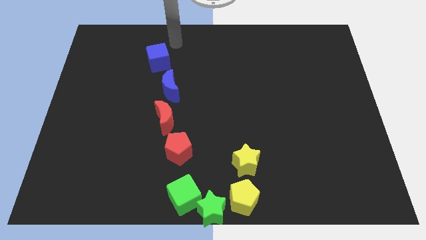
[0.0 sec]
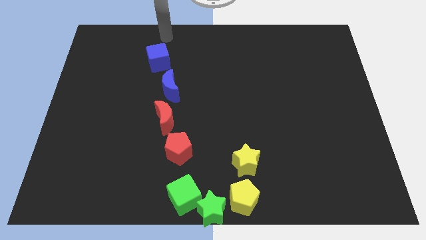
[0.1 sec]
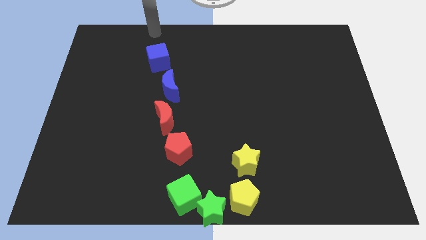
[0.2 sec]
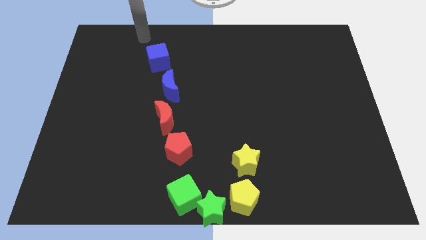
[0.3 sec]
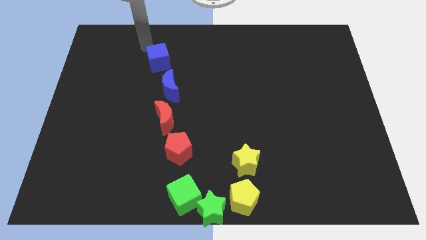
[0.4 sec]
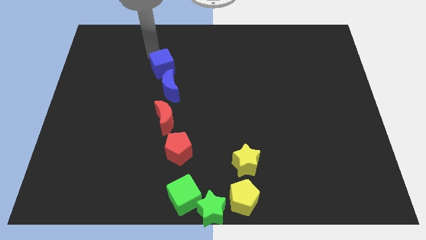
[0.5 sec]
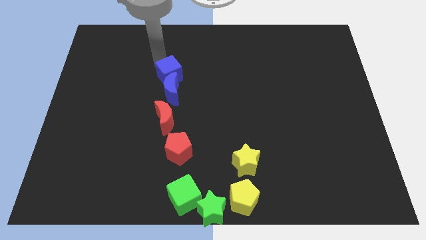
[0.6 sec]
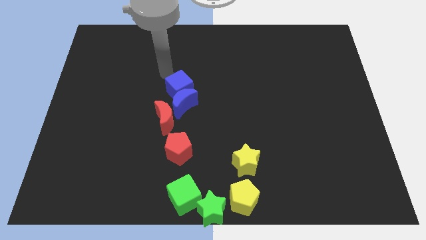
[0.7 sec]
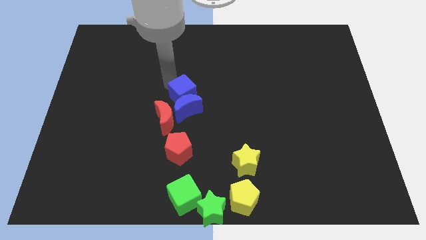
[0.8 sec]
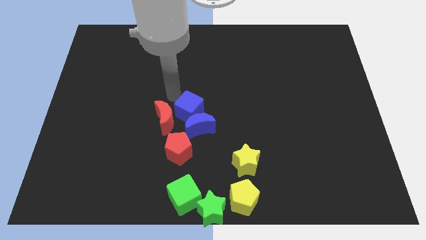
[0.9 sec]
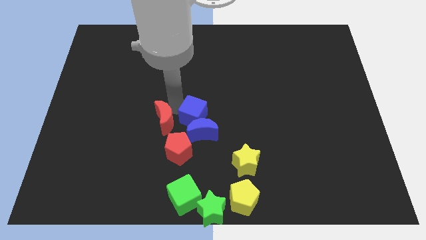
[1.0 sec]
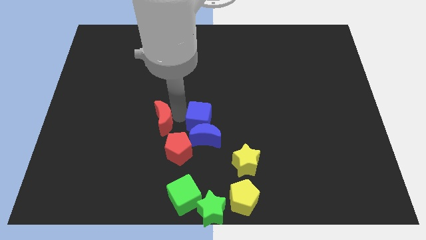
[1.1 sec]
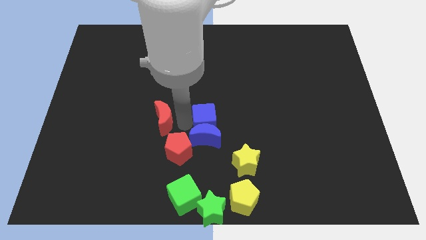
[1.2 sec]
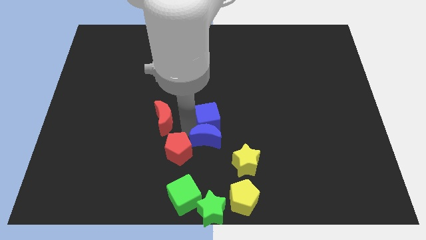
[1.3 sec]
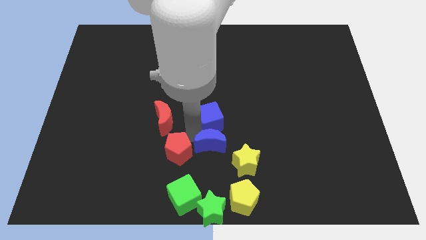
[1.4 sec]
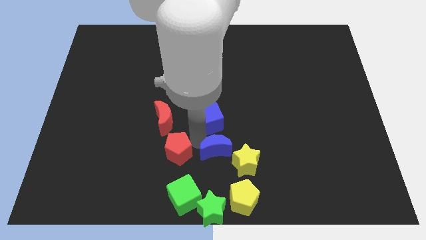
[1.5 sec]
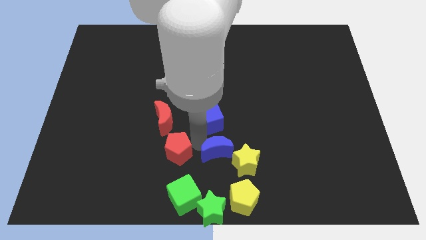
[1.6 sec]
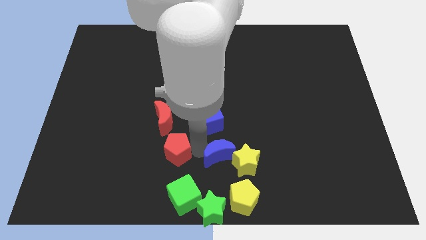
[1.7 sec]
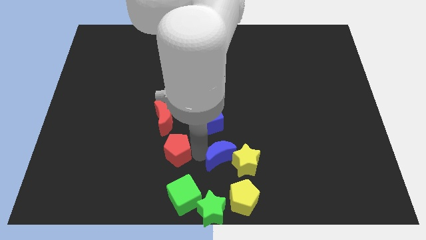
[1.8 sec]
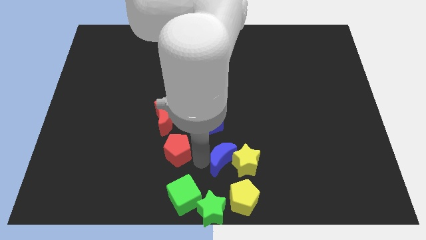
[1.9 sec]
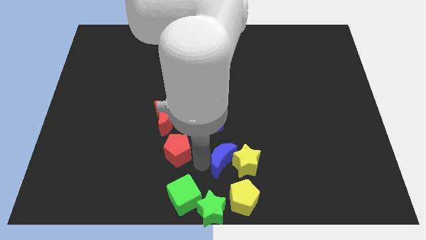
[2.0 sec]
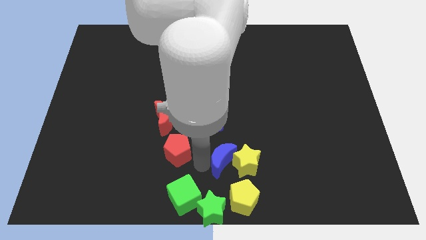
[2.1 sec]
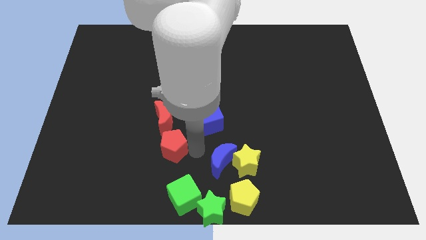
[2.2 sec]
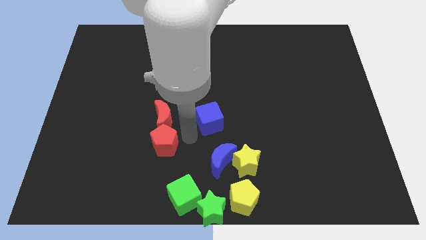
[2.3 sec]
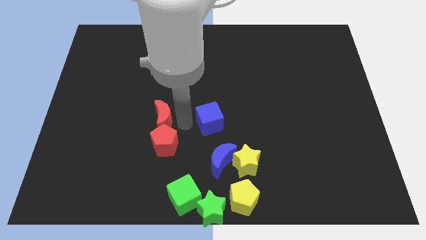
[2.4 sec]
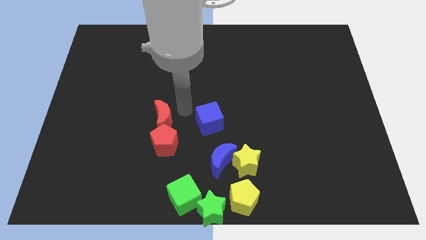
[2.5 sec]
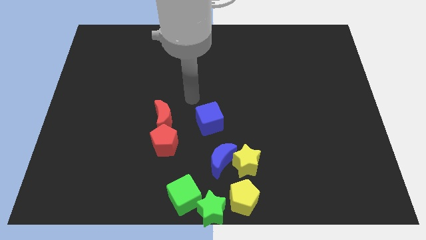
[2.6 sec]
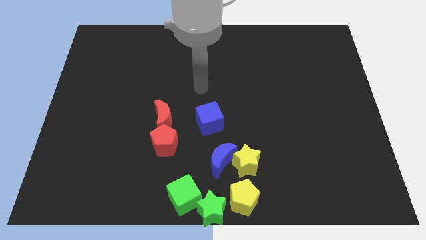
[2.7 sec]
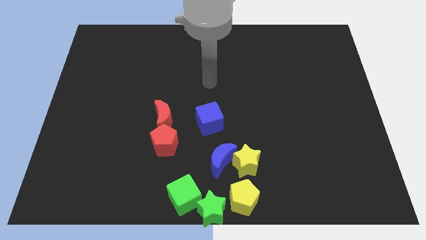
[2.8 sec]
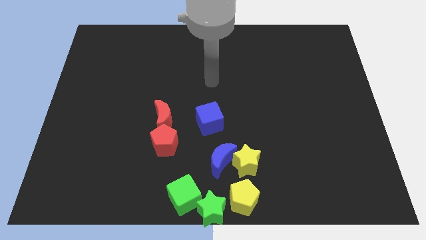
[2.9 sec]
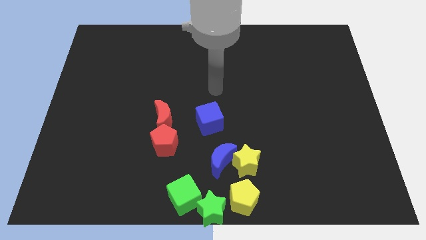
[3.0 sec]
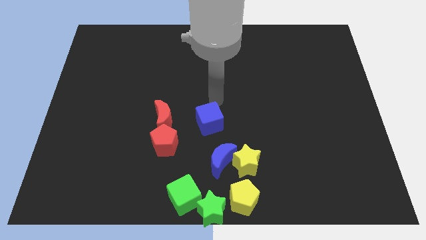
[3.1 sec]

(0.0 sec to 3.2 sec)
separate the blue blocks

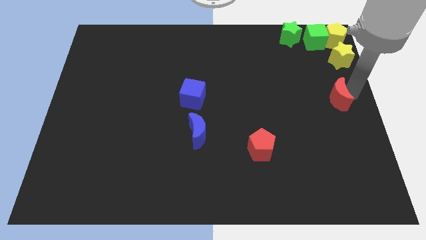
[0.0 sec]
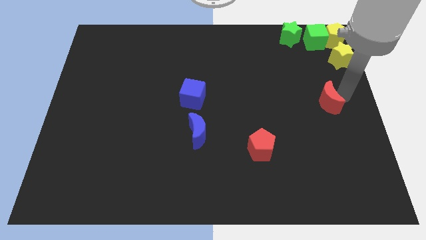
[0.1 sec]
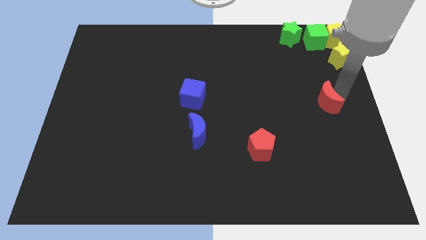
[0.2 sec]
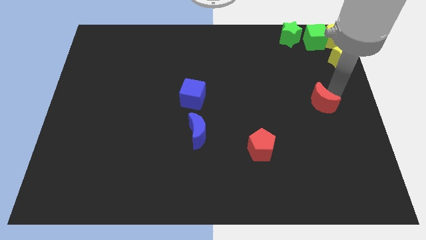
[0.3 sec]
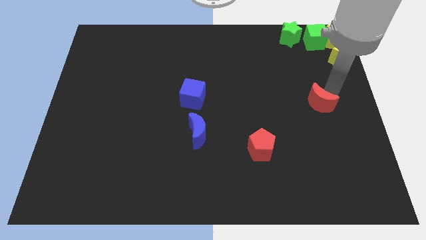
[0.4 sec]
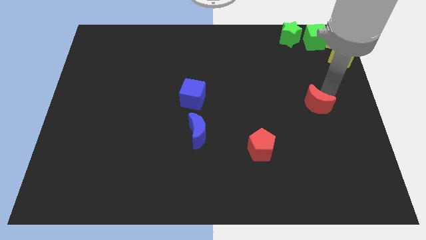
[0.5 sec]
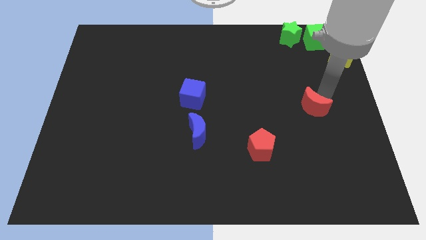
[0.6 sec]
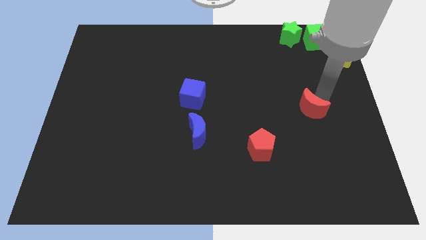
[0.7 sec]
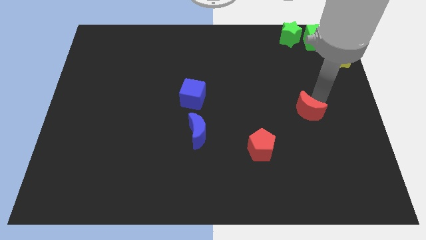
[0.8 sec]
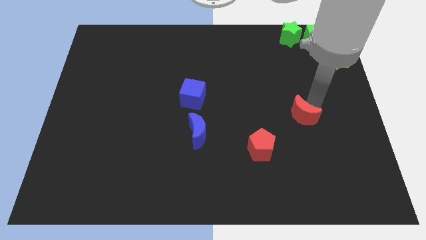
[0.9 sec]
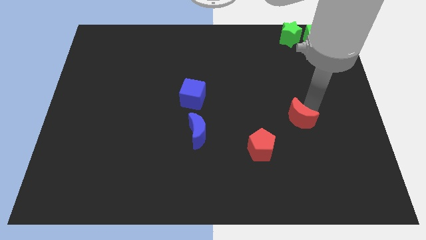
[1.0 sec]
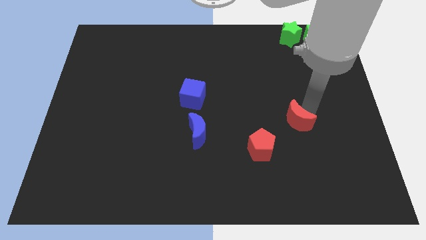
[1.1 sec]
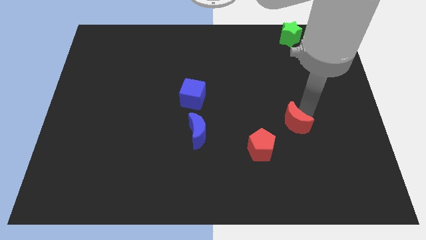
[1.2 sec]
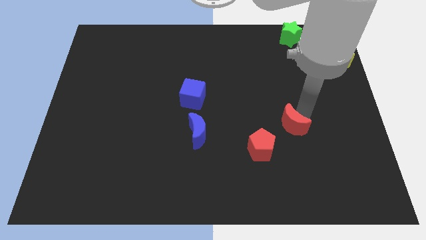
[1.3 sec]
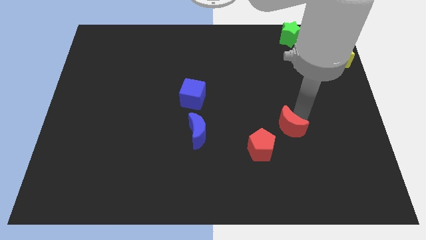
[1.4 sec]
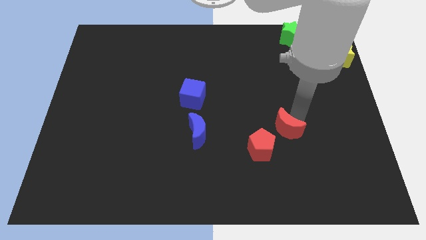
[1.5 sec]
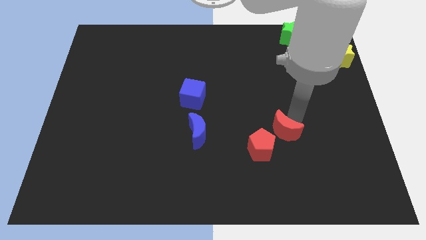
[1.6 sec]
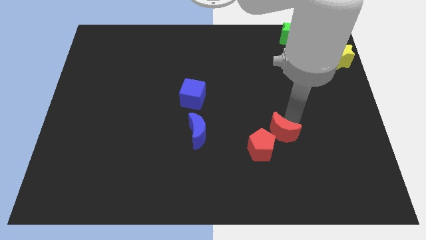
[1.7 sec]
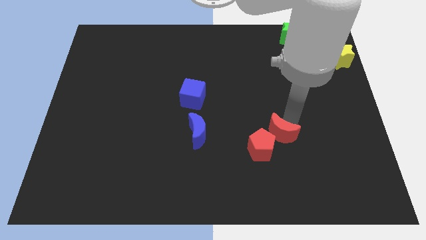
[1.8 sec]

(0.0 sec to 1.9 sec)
move the red crescent towards the red pentagon

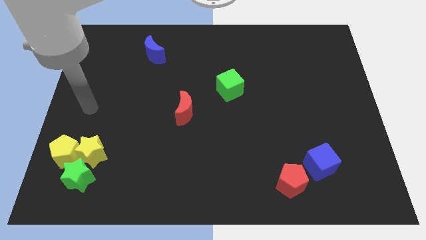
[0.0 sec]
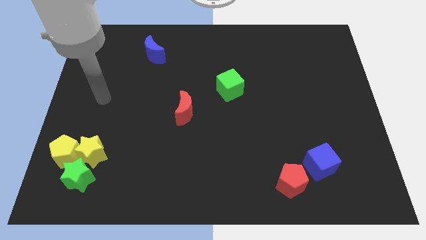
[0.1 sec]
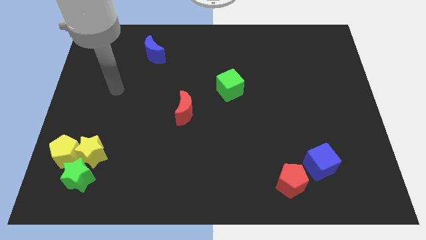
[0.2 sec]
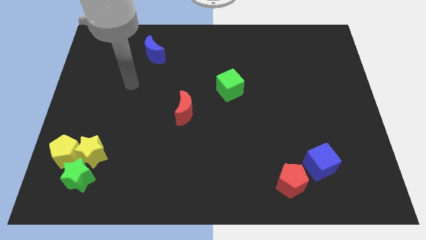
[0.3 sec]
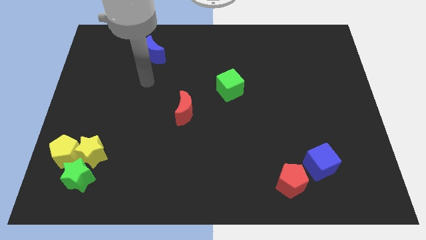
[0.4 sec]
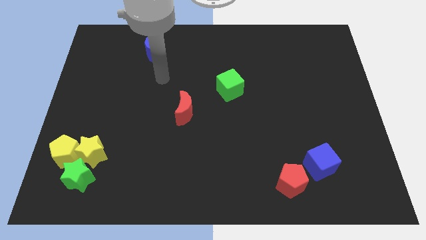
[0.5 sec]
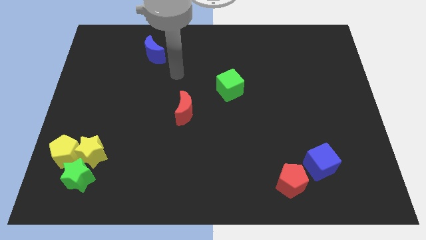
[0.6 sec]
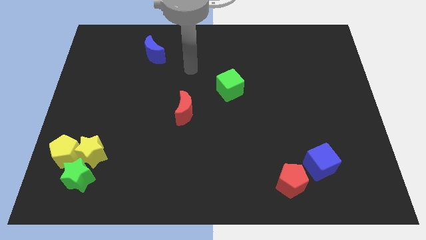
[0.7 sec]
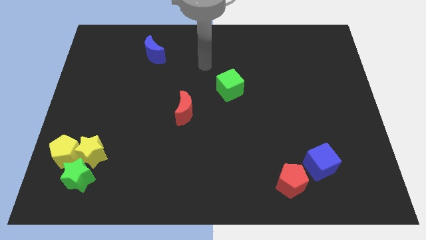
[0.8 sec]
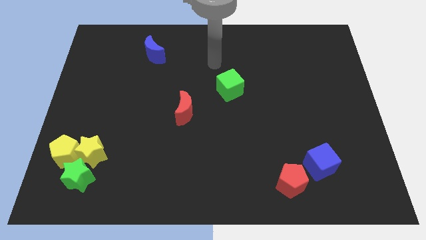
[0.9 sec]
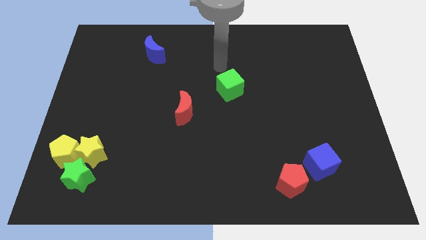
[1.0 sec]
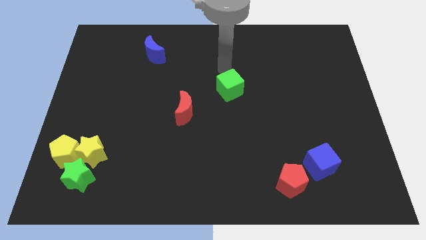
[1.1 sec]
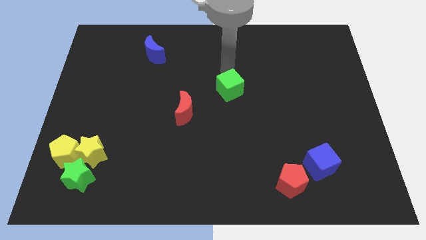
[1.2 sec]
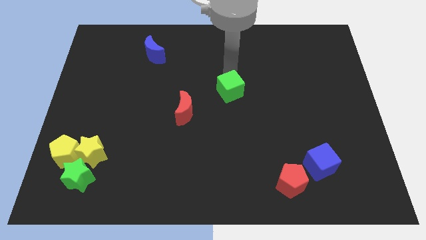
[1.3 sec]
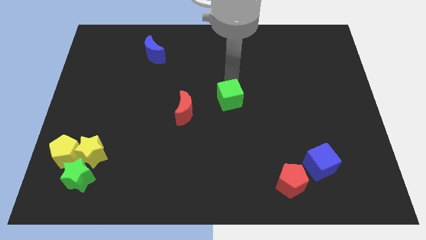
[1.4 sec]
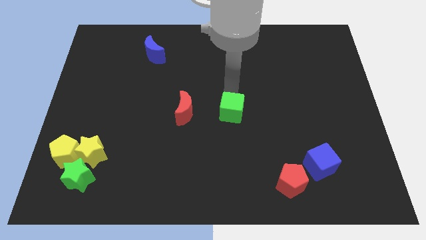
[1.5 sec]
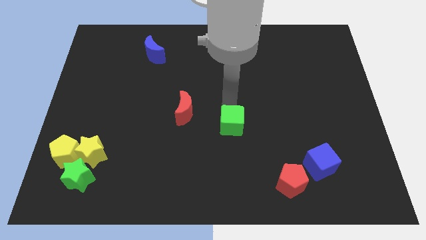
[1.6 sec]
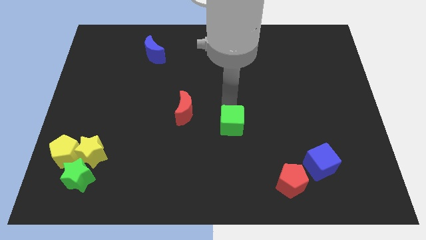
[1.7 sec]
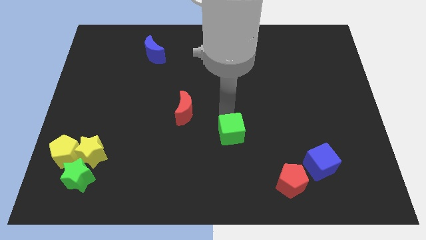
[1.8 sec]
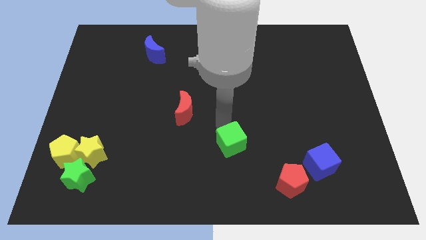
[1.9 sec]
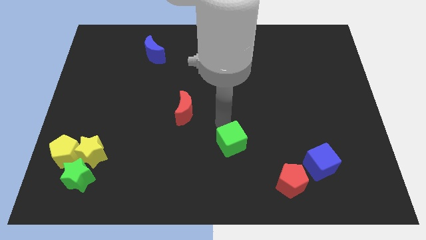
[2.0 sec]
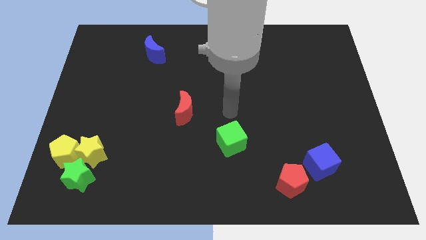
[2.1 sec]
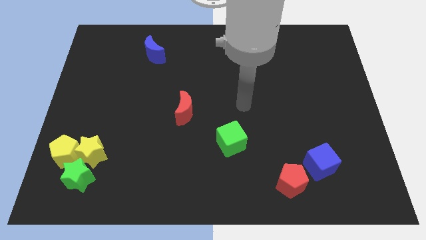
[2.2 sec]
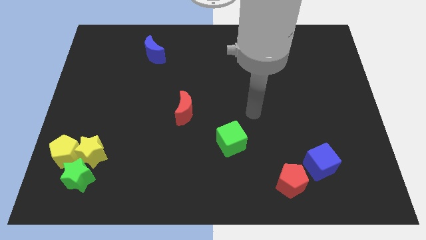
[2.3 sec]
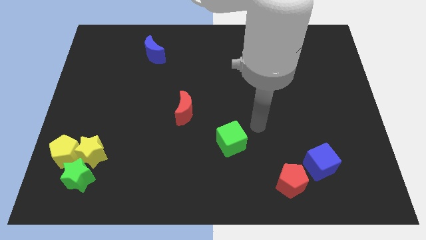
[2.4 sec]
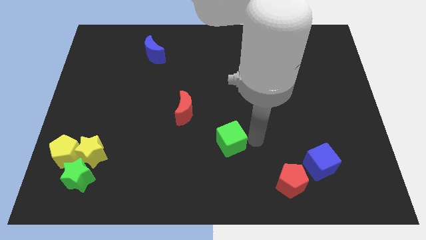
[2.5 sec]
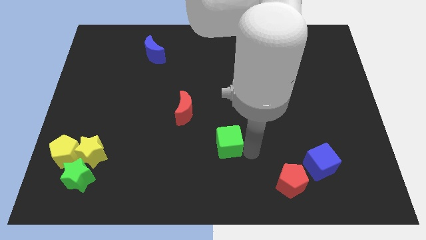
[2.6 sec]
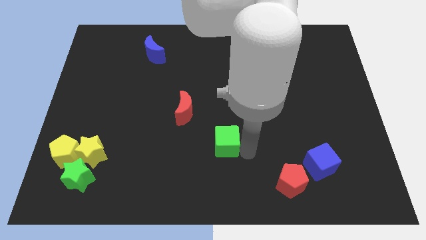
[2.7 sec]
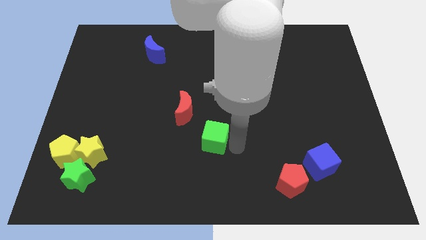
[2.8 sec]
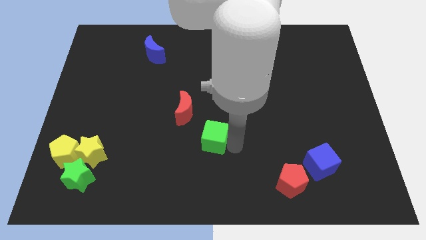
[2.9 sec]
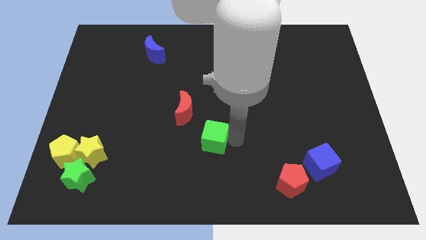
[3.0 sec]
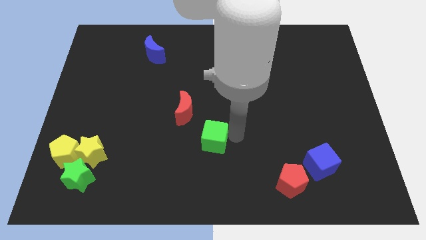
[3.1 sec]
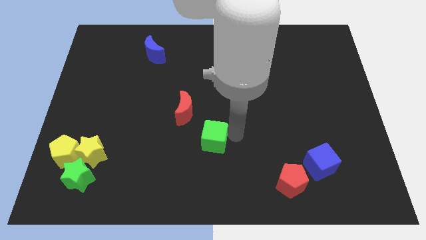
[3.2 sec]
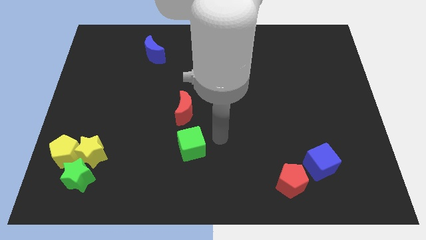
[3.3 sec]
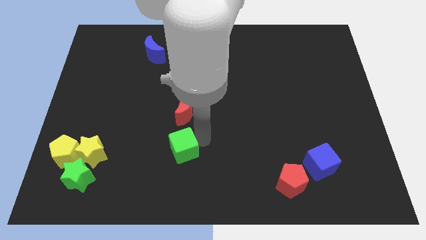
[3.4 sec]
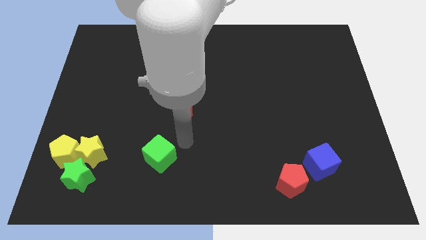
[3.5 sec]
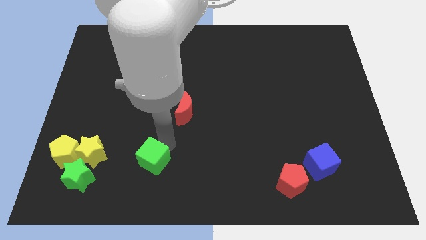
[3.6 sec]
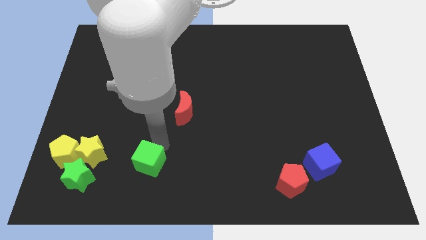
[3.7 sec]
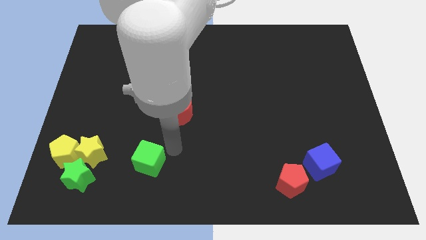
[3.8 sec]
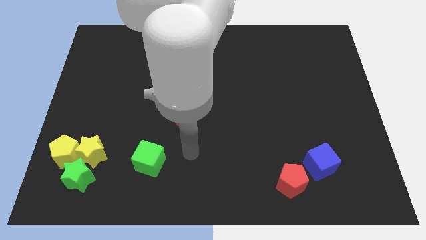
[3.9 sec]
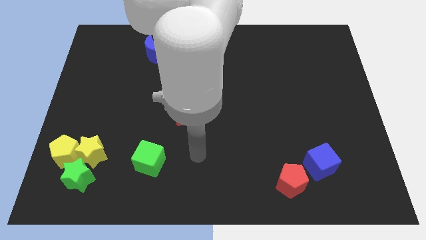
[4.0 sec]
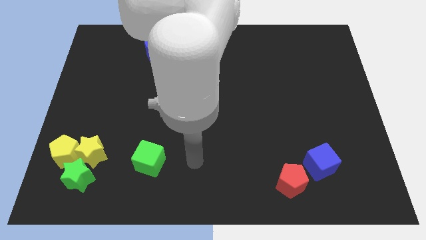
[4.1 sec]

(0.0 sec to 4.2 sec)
place the green cube right to the yellow star horizontally
